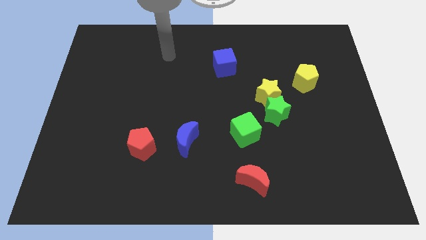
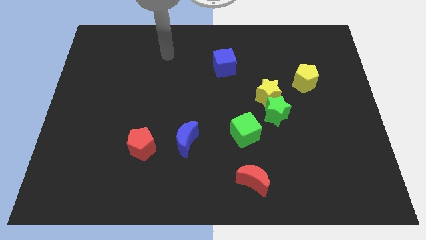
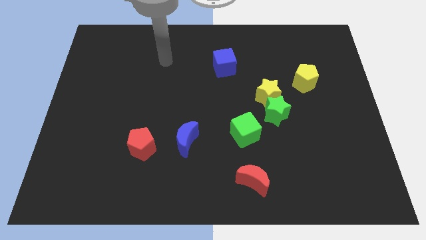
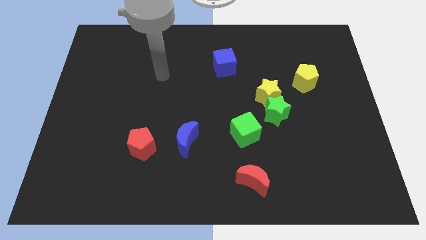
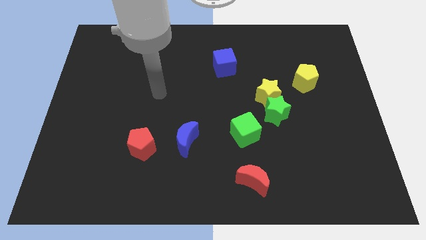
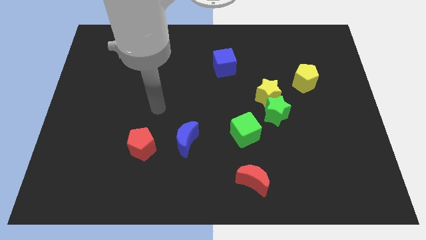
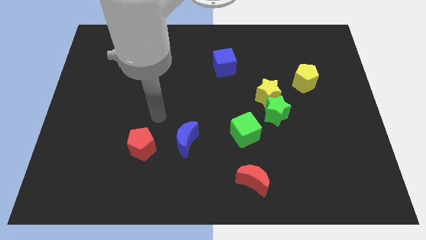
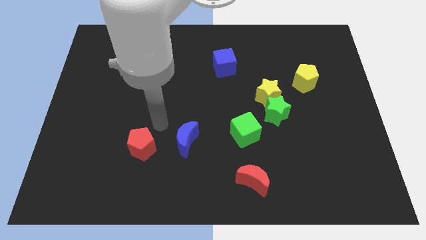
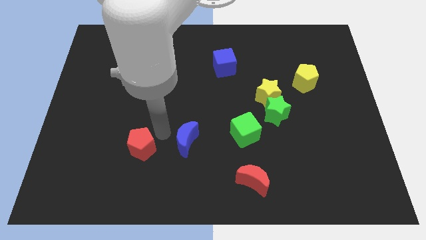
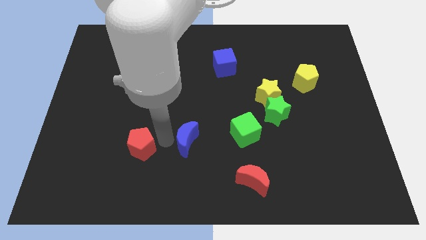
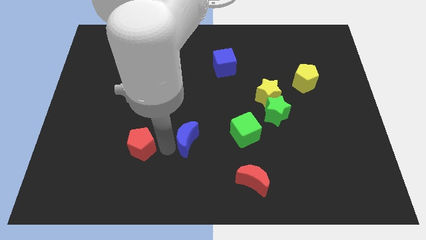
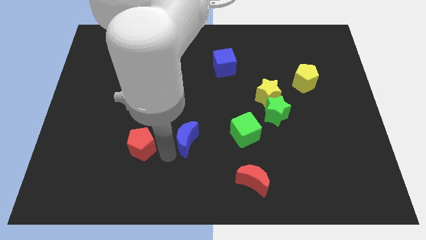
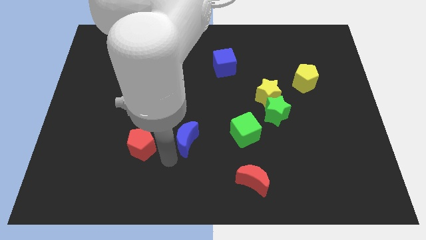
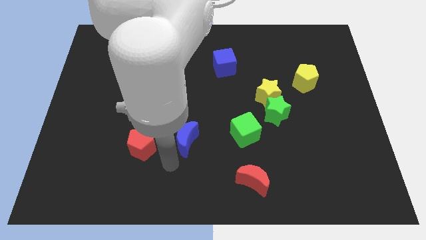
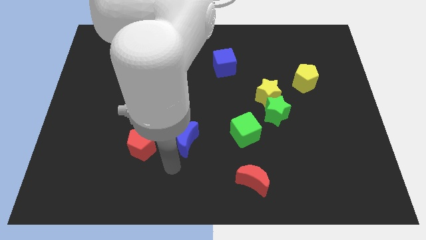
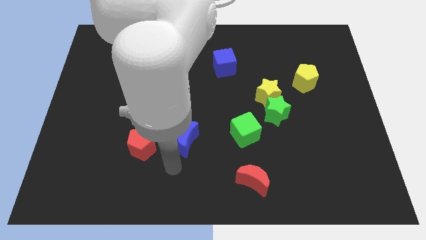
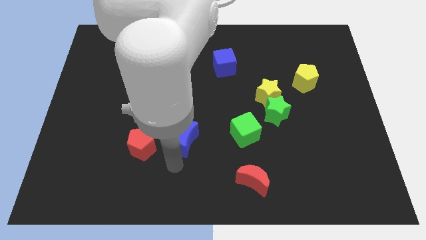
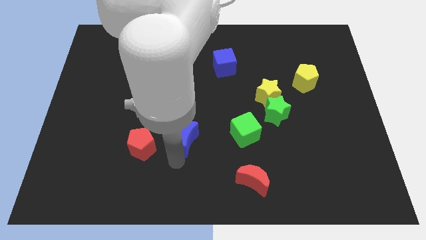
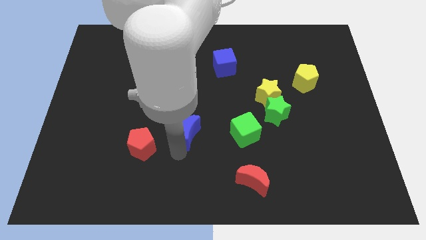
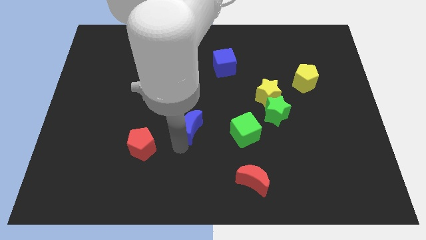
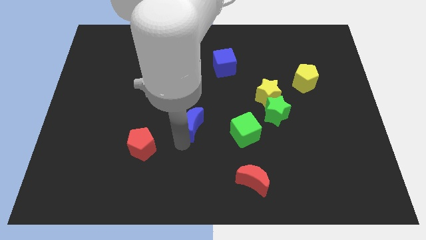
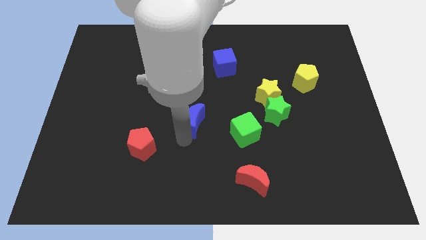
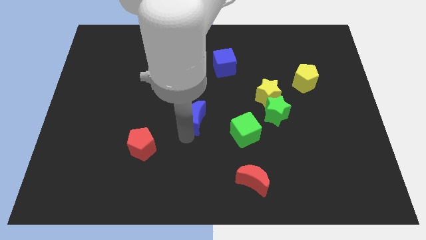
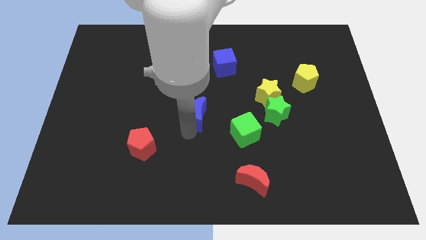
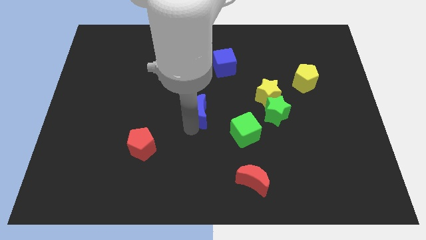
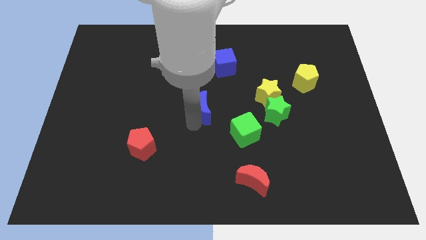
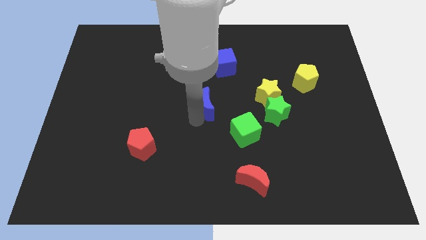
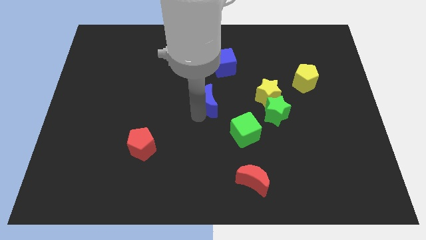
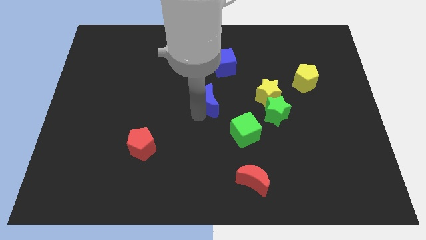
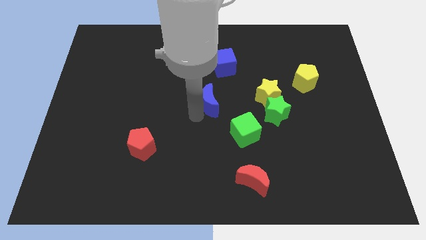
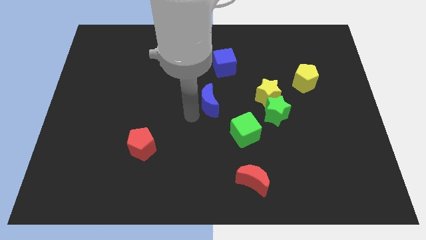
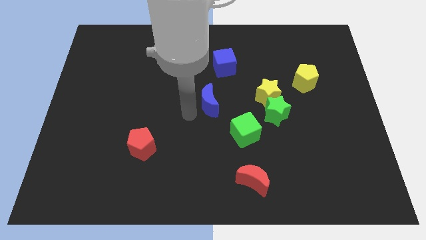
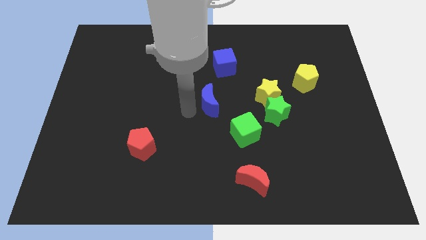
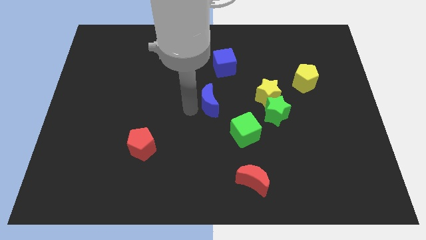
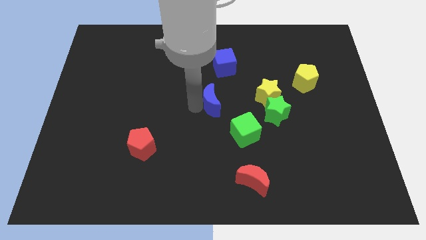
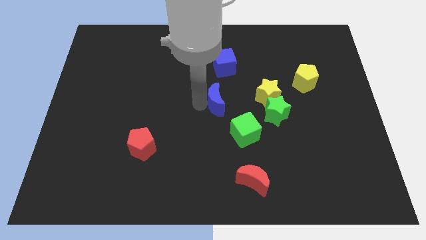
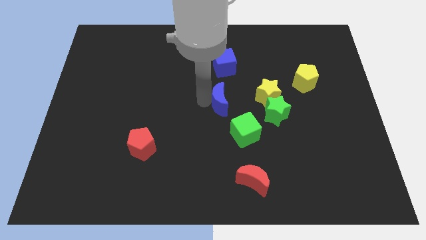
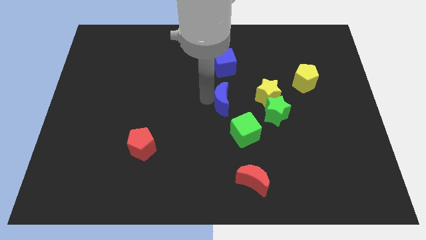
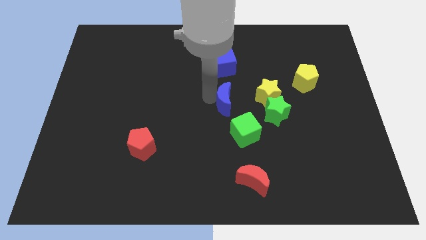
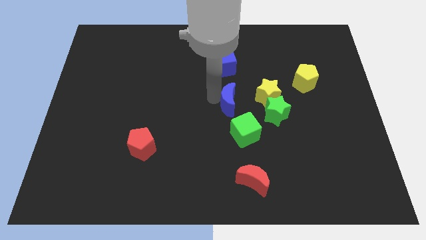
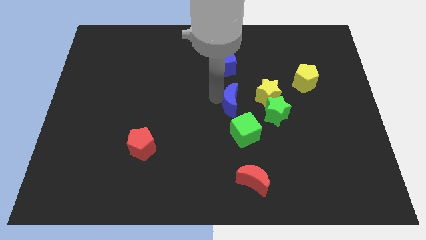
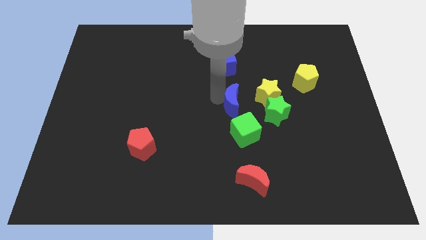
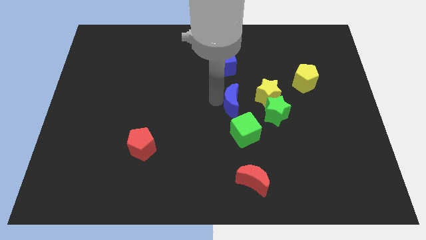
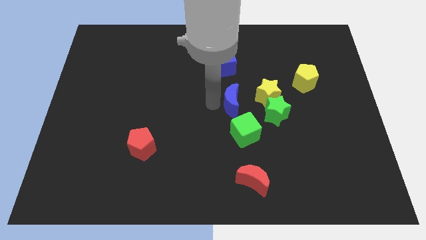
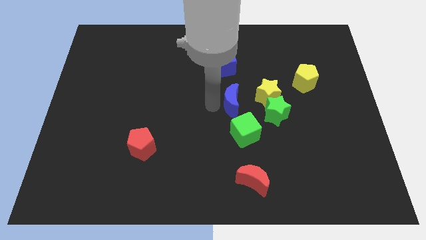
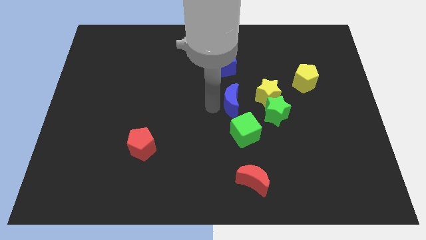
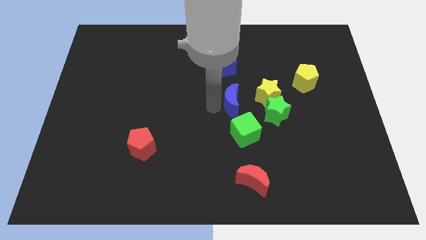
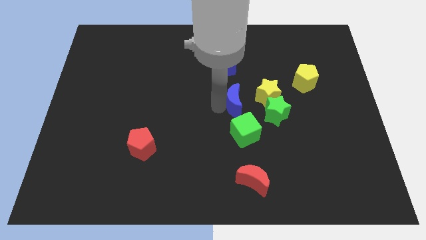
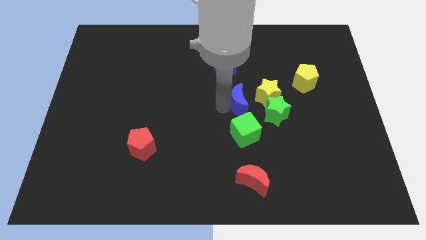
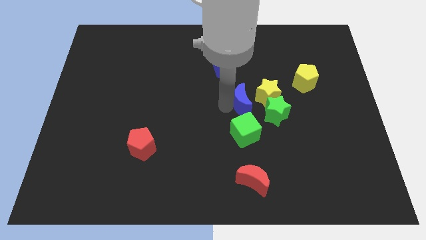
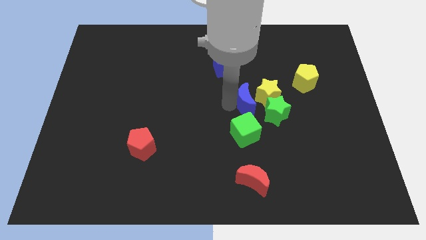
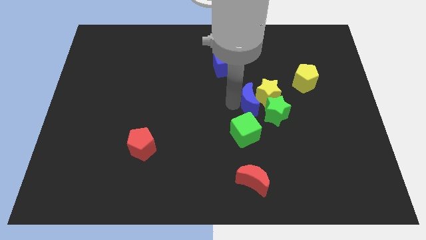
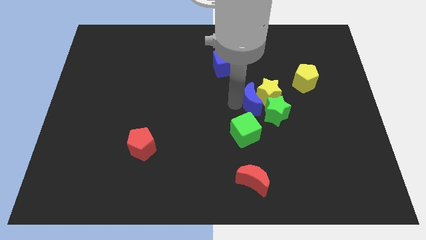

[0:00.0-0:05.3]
push the blue moon close to the yellow star

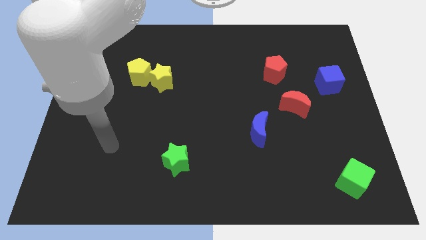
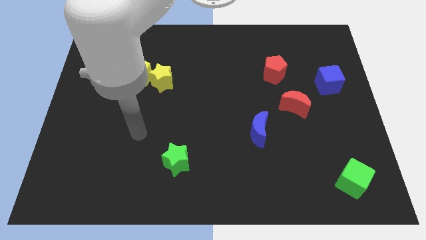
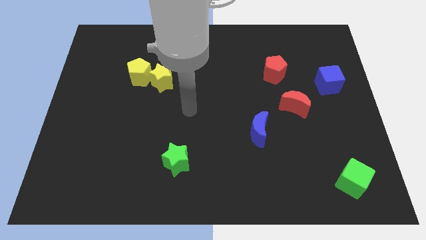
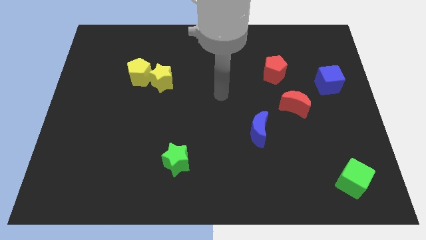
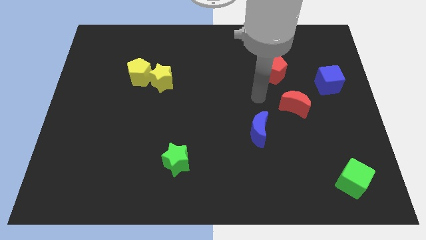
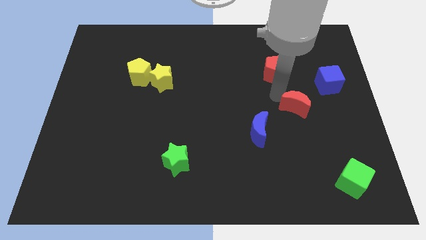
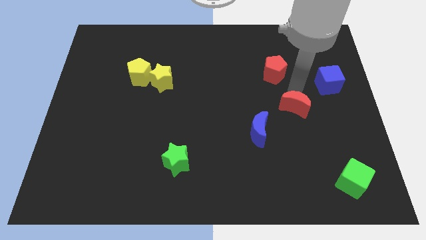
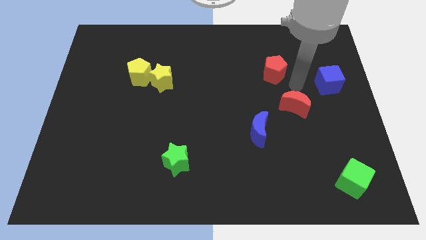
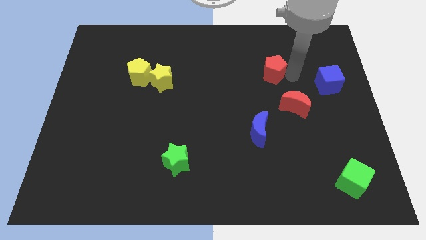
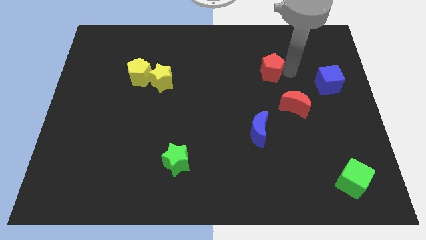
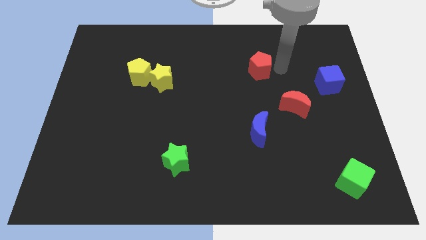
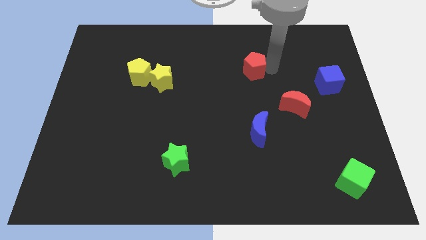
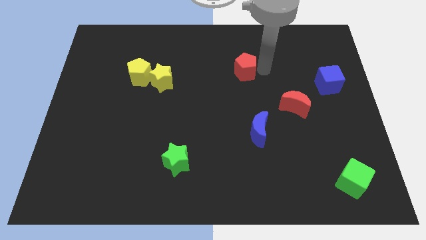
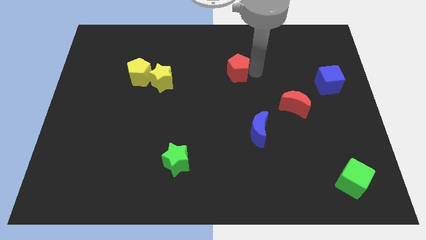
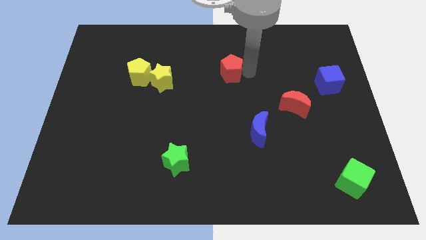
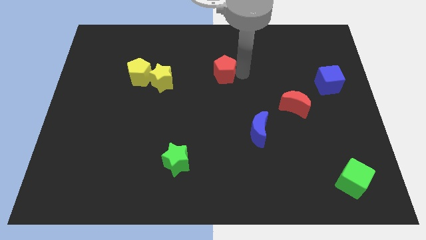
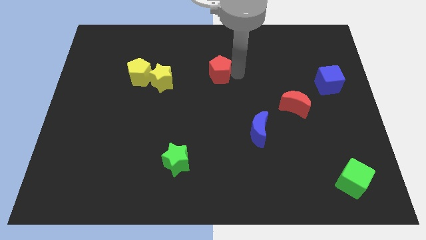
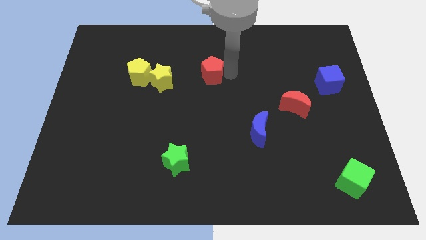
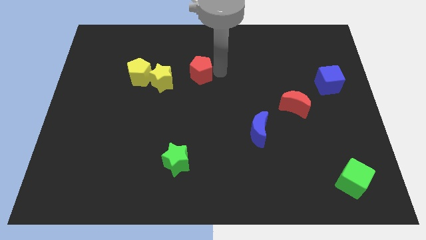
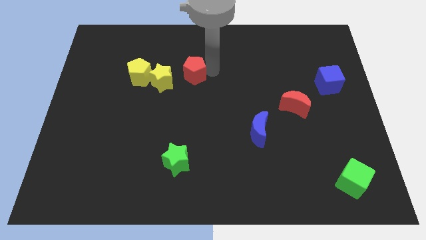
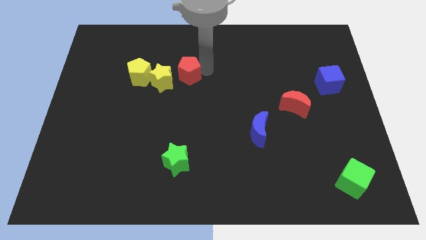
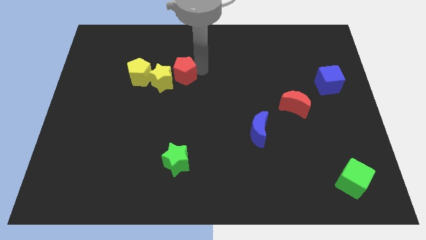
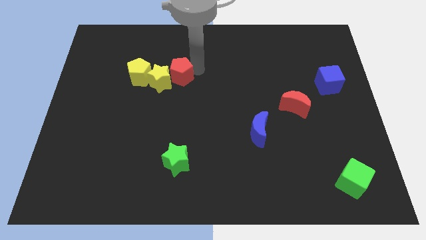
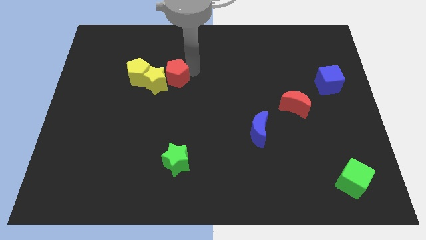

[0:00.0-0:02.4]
slide the red pentagon to the yellow star

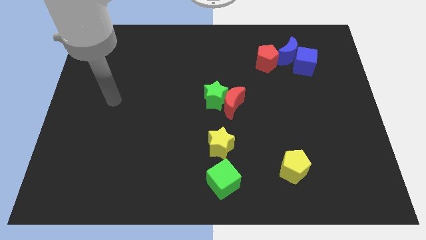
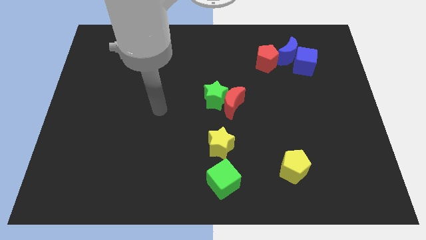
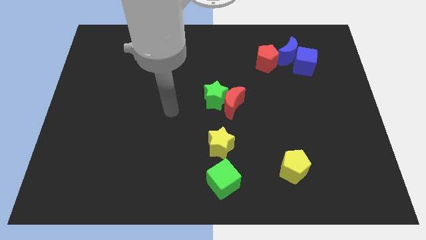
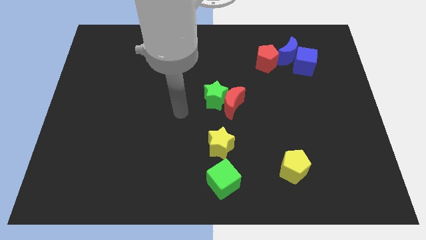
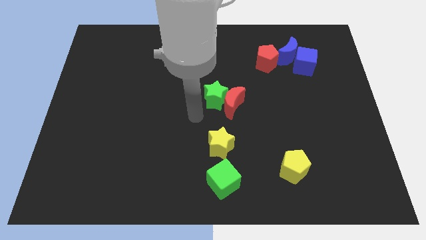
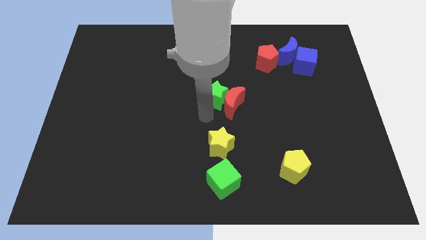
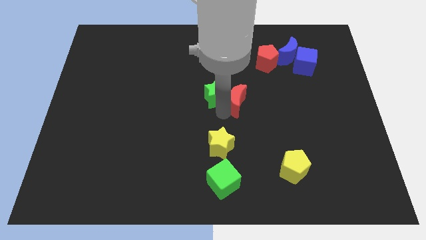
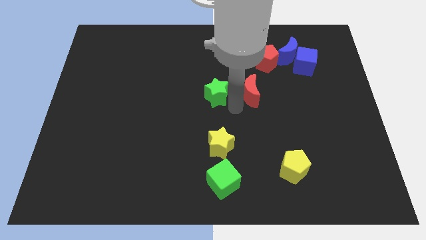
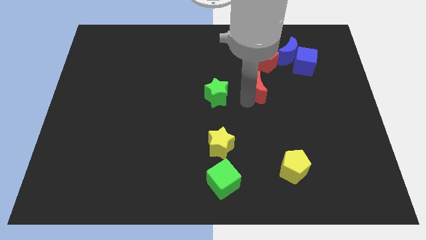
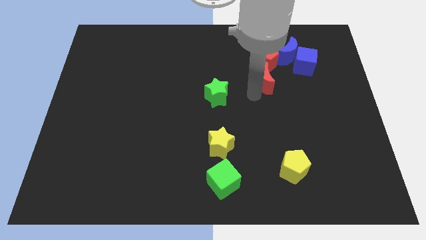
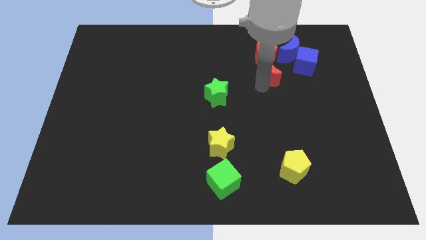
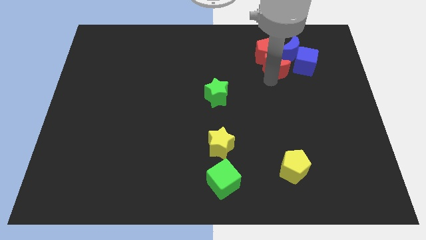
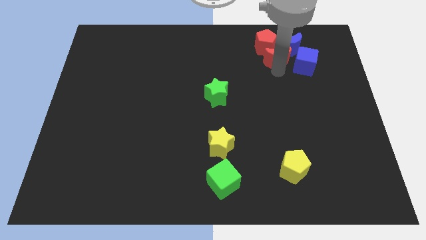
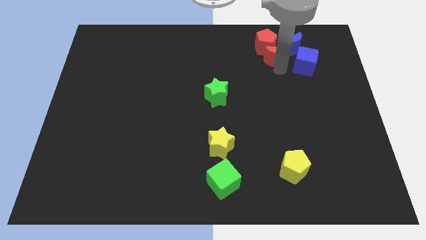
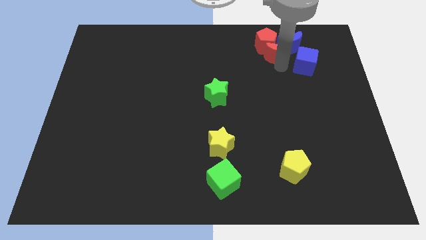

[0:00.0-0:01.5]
put the red moon close to the blue moon
